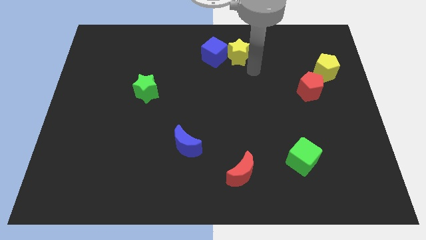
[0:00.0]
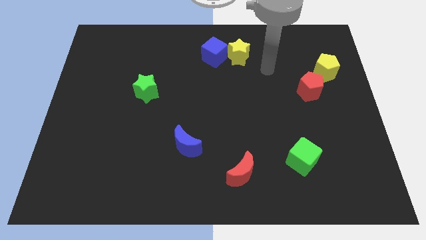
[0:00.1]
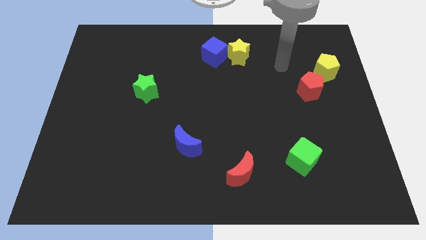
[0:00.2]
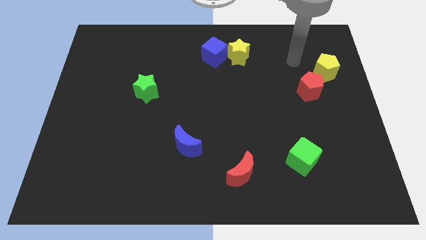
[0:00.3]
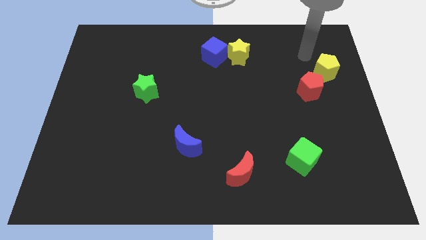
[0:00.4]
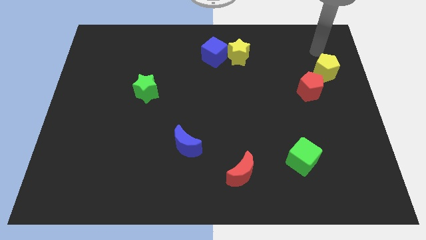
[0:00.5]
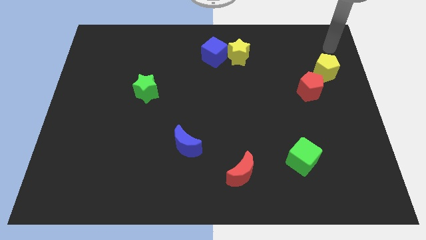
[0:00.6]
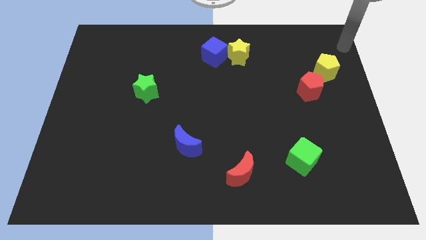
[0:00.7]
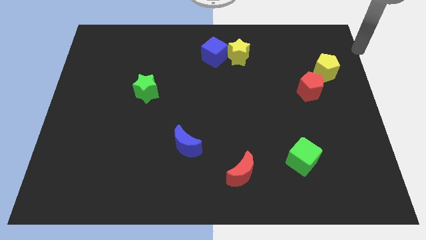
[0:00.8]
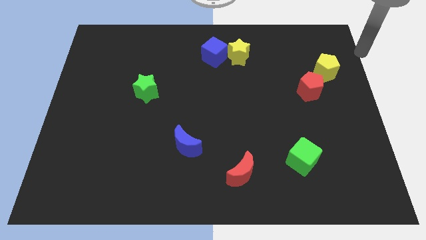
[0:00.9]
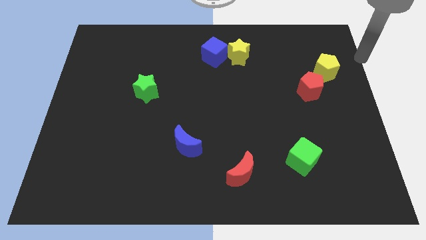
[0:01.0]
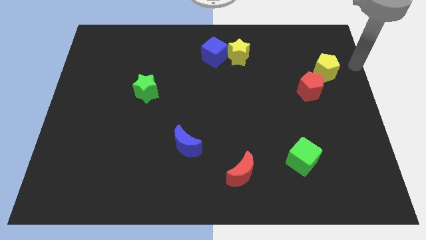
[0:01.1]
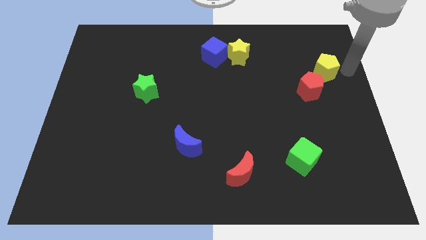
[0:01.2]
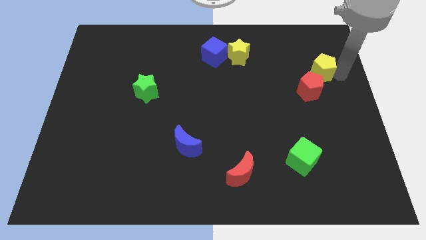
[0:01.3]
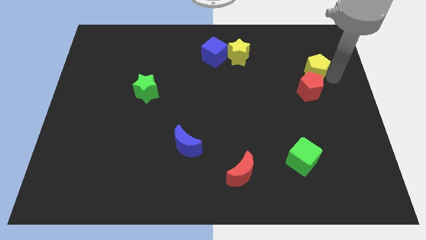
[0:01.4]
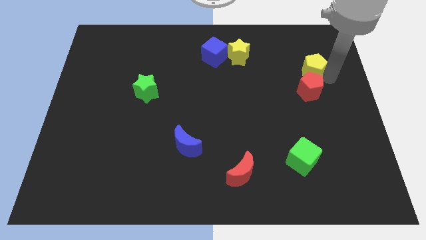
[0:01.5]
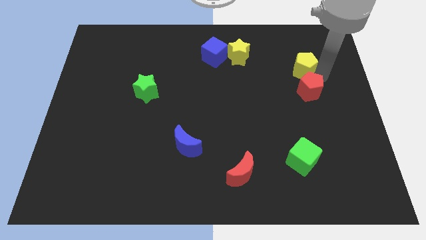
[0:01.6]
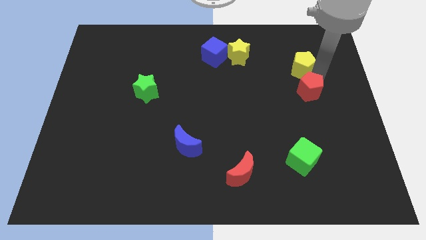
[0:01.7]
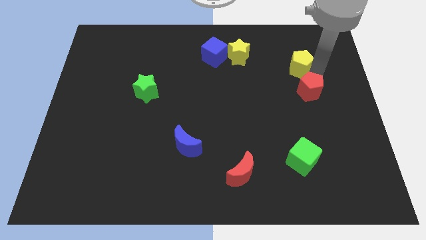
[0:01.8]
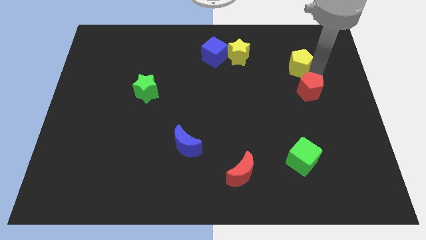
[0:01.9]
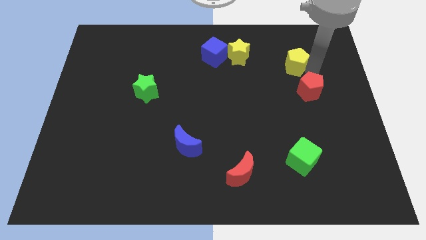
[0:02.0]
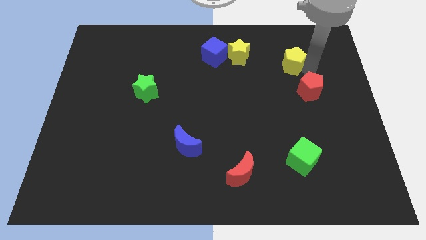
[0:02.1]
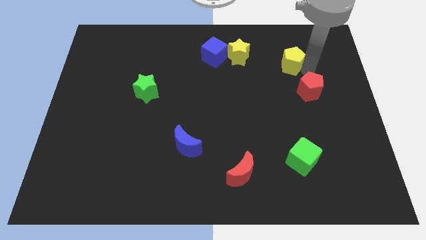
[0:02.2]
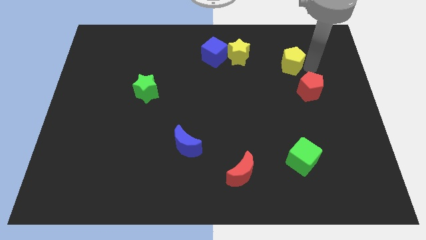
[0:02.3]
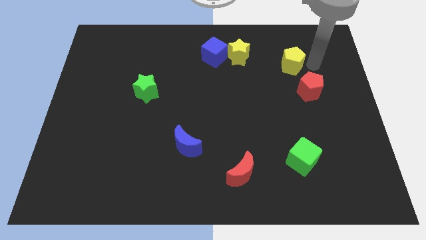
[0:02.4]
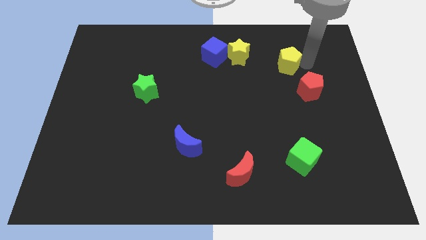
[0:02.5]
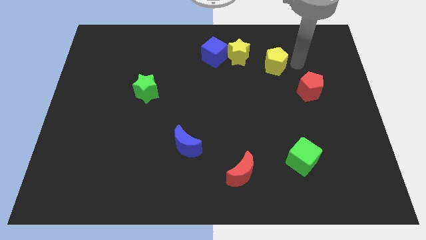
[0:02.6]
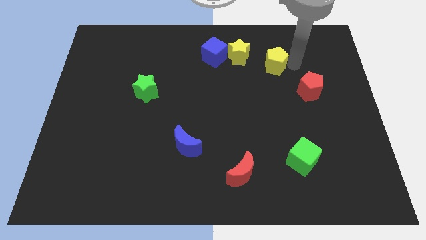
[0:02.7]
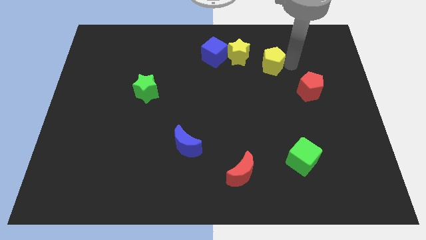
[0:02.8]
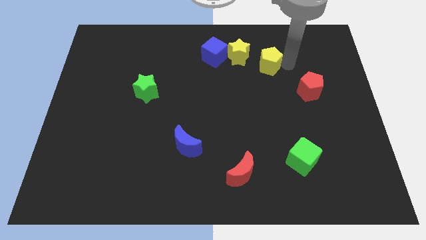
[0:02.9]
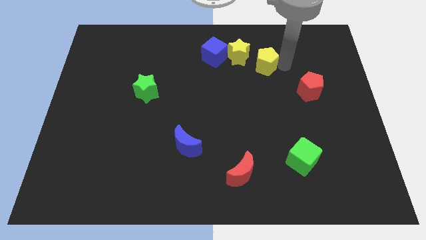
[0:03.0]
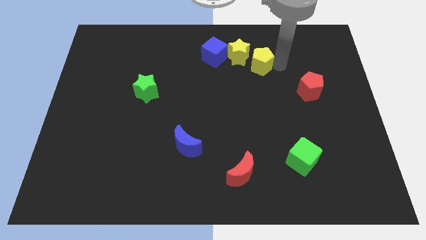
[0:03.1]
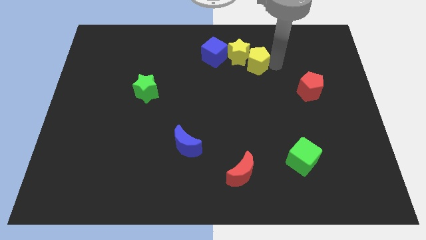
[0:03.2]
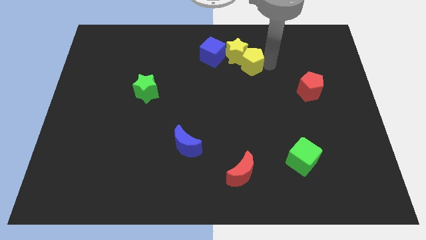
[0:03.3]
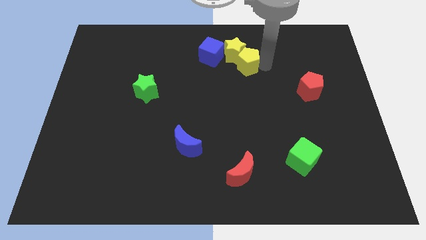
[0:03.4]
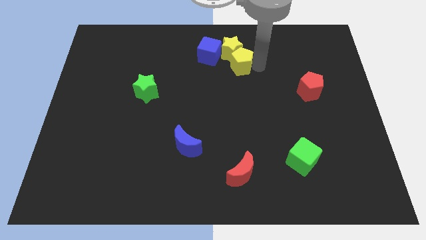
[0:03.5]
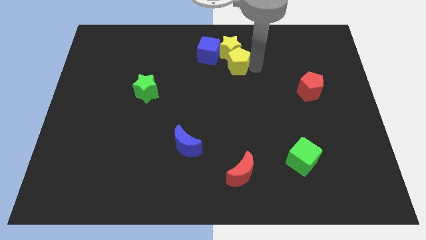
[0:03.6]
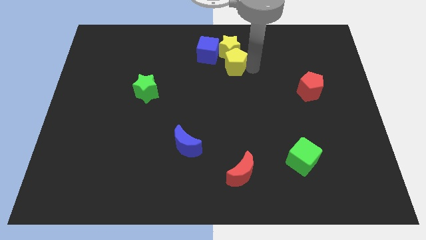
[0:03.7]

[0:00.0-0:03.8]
push the yellow pentagon into the yellow star

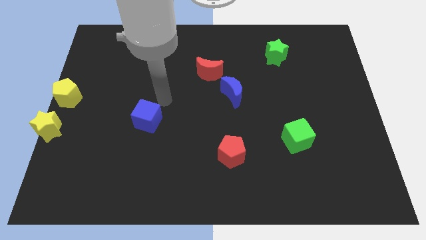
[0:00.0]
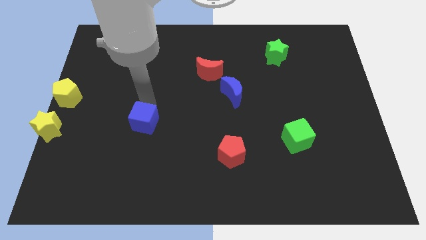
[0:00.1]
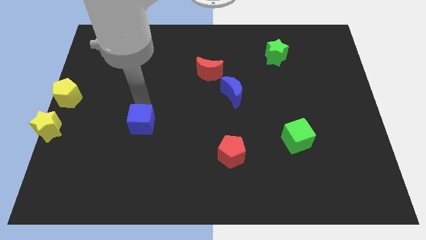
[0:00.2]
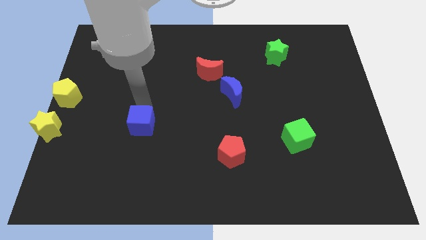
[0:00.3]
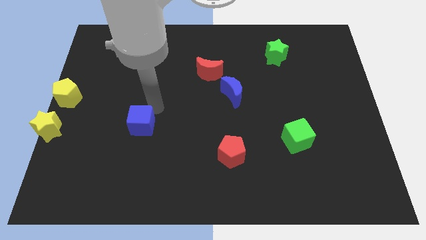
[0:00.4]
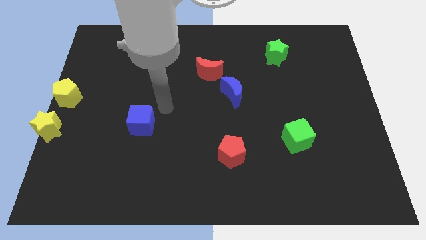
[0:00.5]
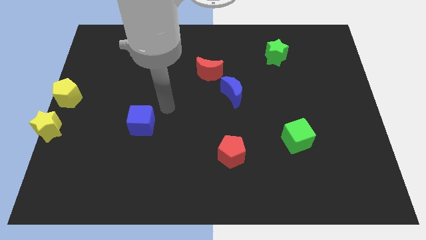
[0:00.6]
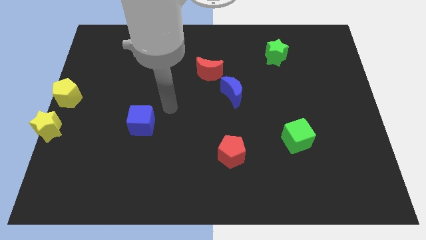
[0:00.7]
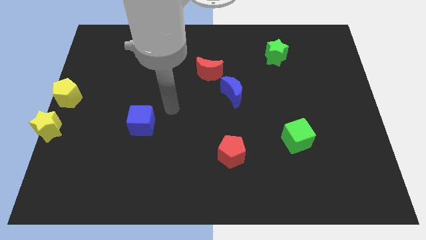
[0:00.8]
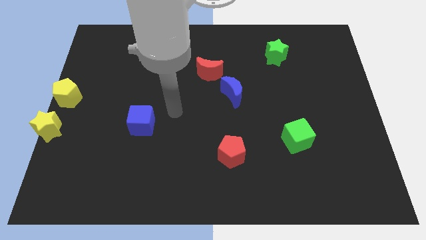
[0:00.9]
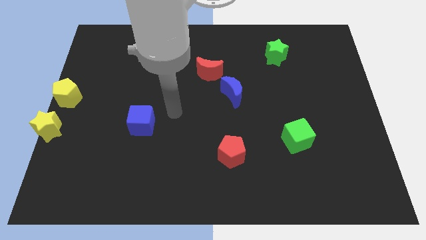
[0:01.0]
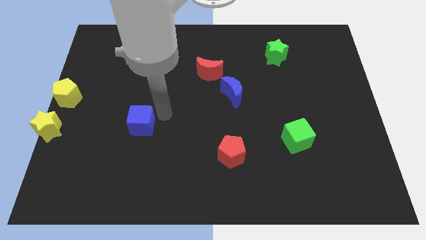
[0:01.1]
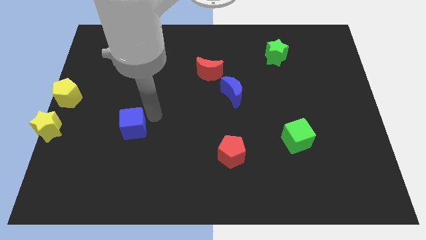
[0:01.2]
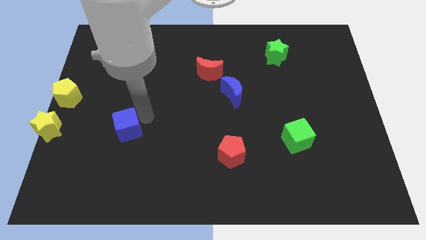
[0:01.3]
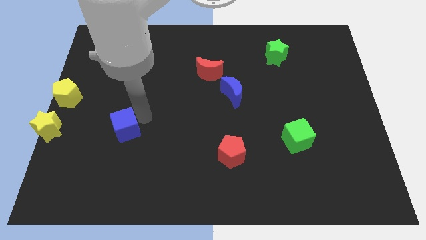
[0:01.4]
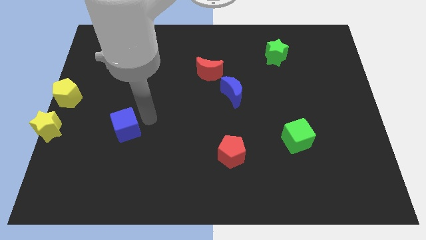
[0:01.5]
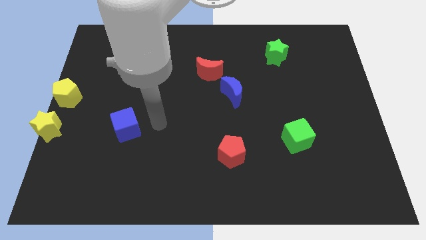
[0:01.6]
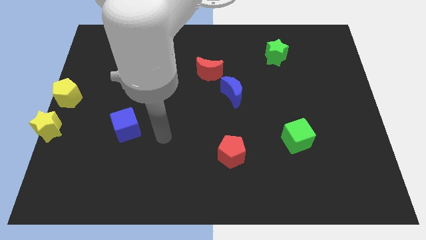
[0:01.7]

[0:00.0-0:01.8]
drag the blue cube to the right of the yellow star

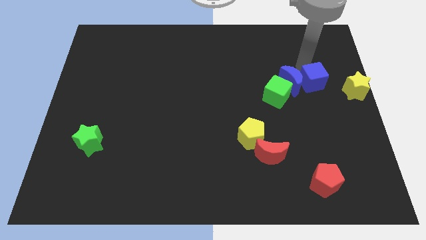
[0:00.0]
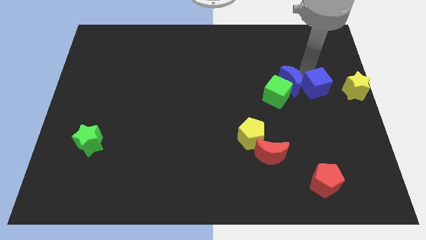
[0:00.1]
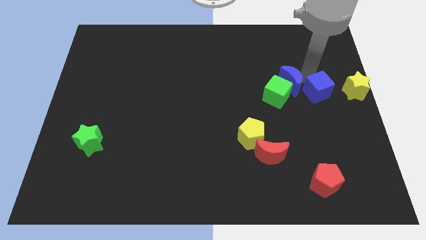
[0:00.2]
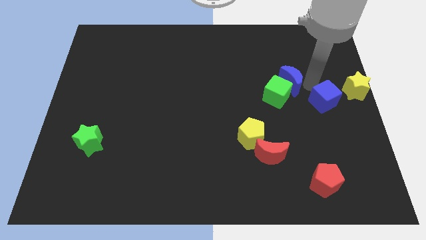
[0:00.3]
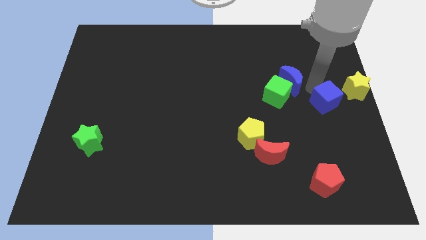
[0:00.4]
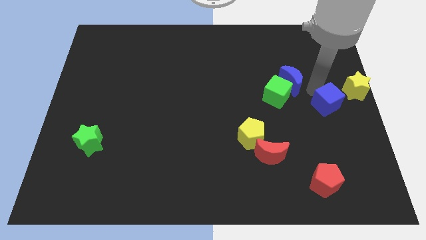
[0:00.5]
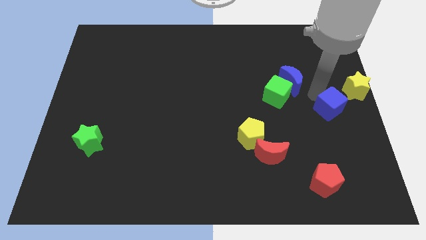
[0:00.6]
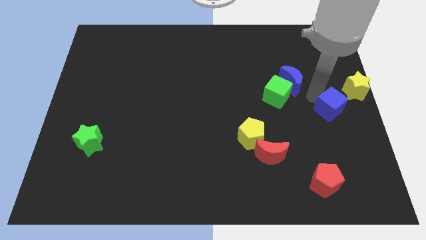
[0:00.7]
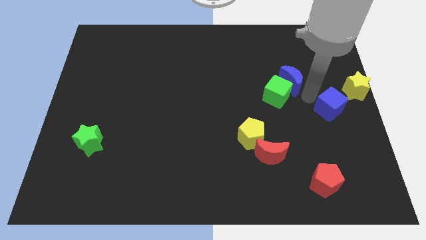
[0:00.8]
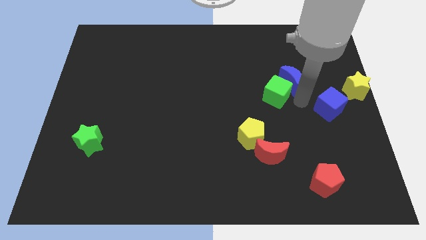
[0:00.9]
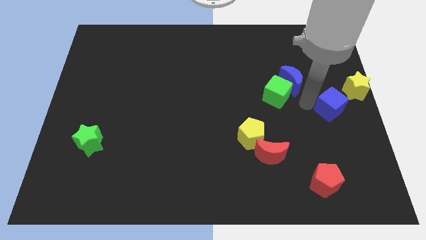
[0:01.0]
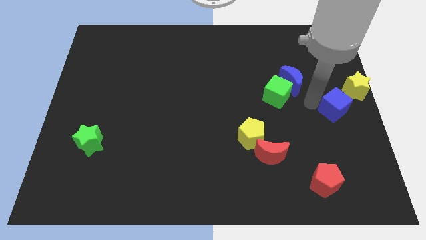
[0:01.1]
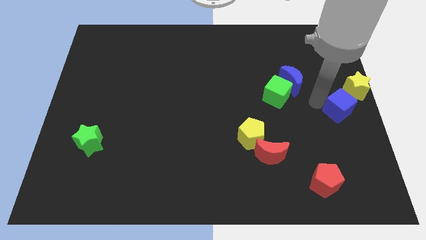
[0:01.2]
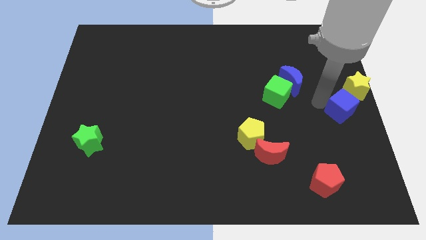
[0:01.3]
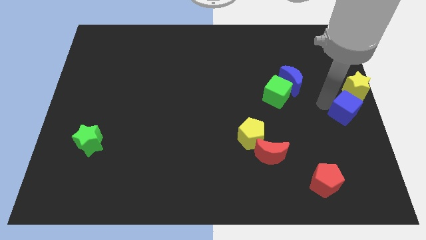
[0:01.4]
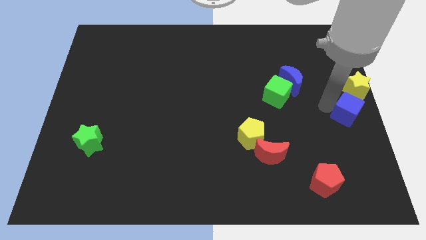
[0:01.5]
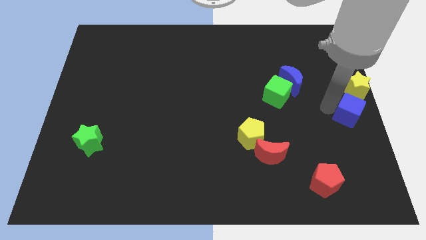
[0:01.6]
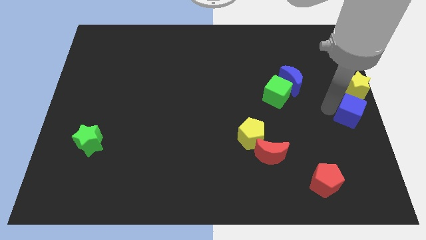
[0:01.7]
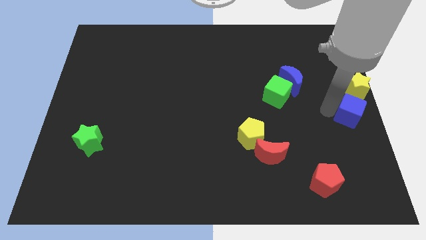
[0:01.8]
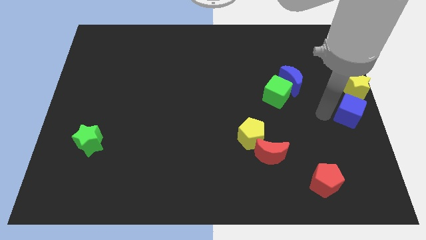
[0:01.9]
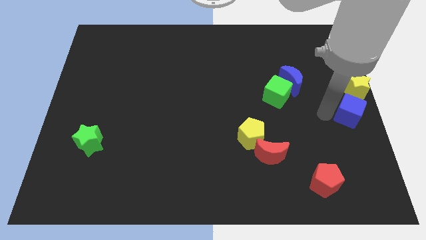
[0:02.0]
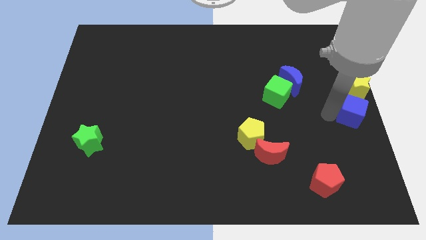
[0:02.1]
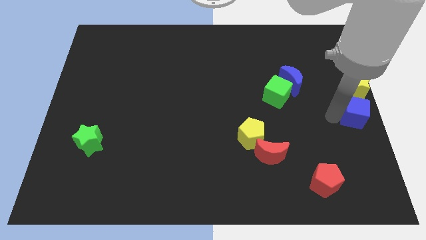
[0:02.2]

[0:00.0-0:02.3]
place the blue cube below yellow star

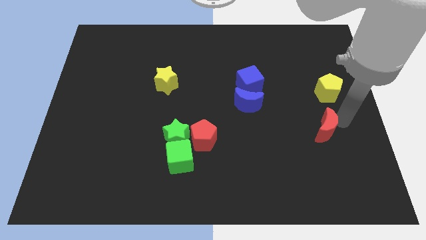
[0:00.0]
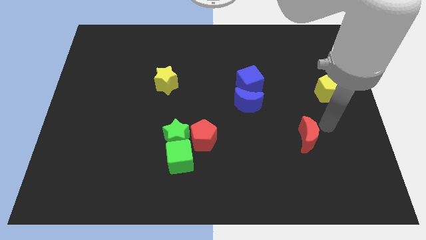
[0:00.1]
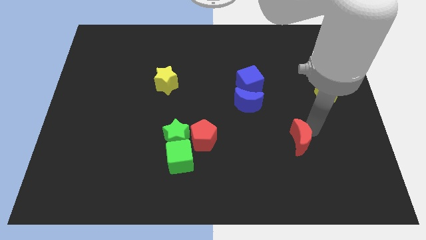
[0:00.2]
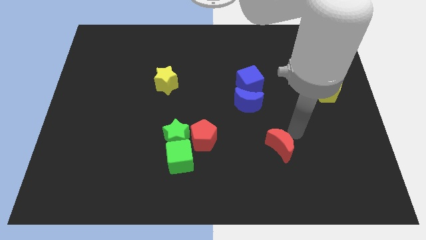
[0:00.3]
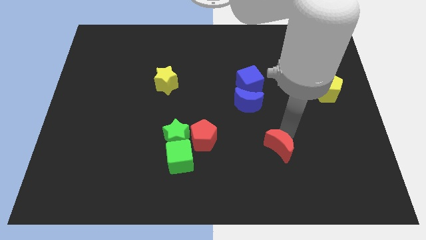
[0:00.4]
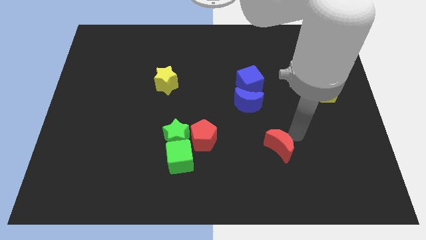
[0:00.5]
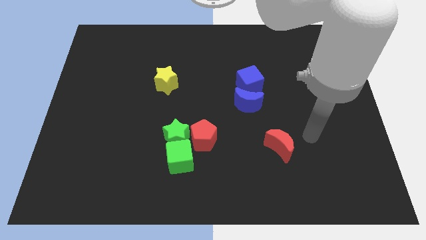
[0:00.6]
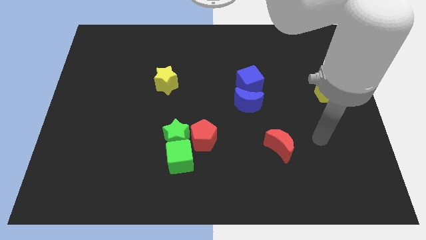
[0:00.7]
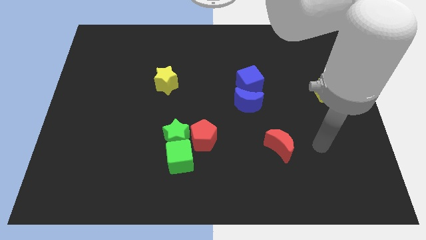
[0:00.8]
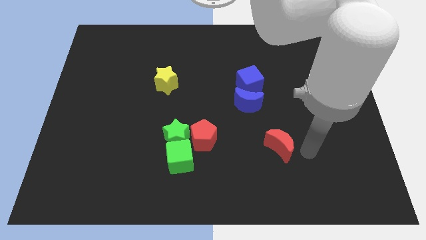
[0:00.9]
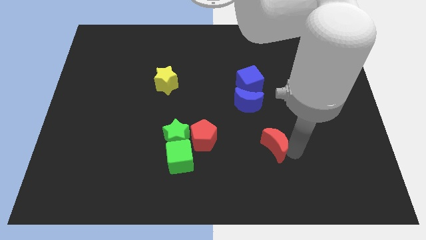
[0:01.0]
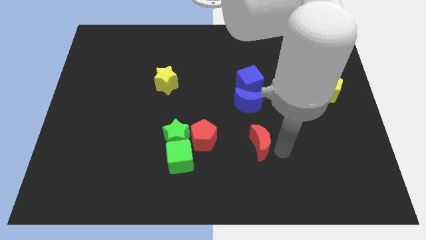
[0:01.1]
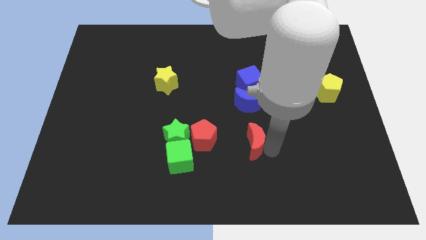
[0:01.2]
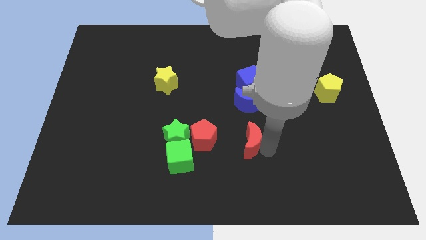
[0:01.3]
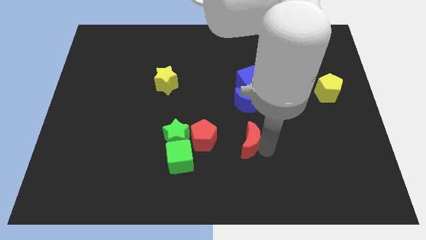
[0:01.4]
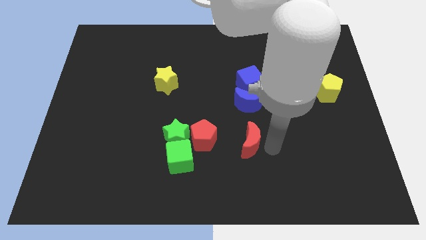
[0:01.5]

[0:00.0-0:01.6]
move the red crescent towards the red pentagon
